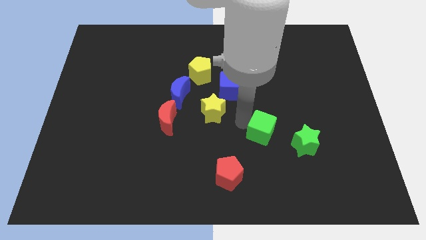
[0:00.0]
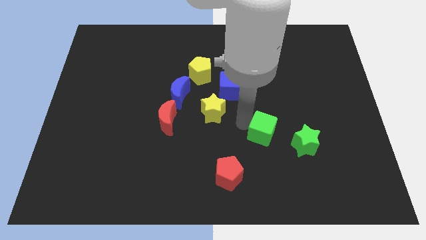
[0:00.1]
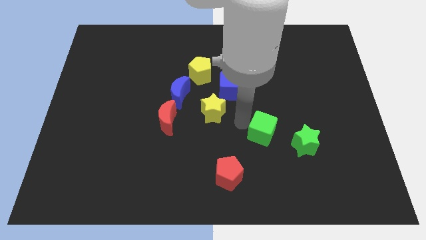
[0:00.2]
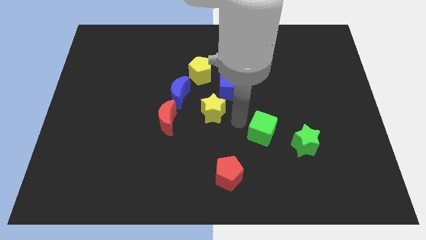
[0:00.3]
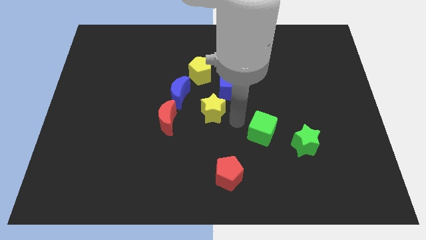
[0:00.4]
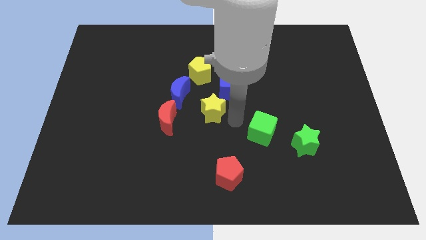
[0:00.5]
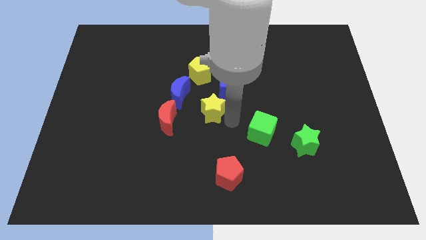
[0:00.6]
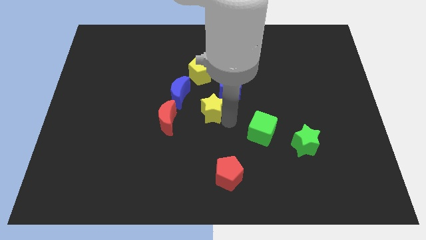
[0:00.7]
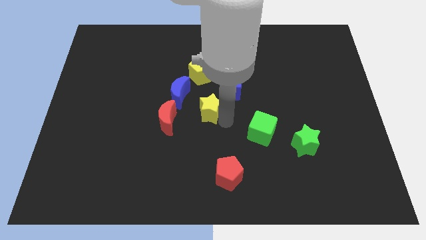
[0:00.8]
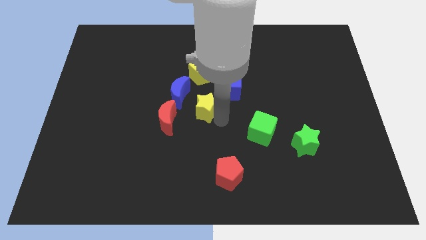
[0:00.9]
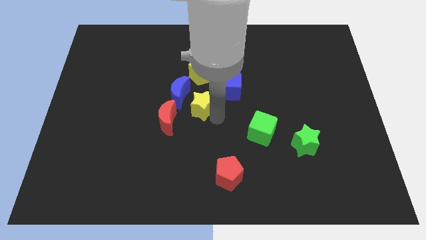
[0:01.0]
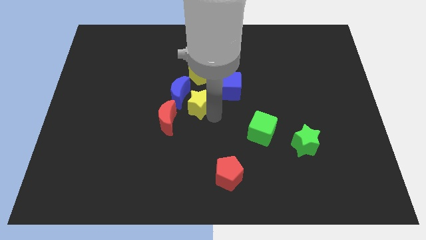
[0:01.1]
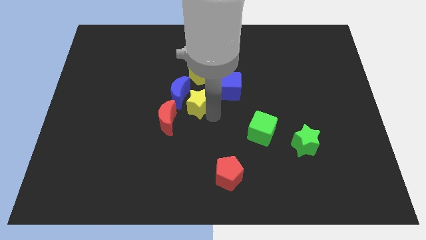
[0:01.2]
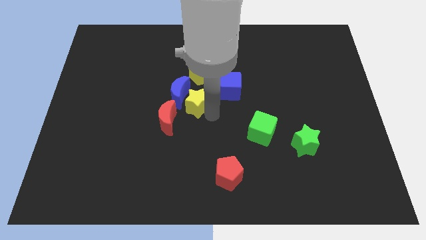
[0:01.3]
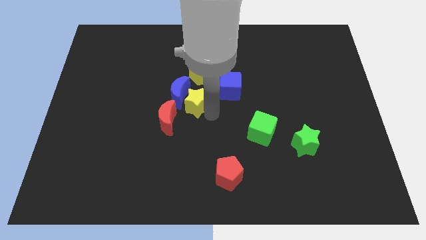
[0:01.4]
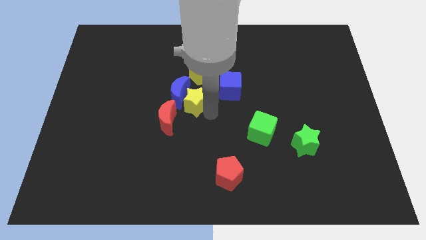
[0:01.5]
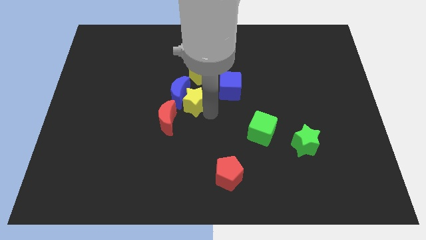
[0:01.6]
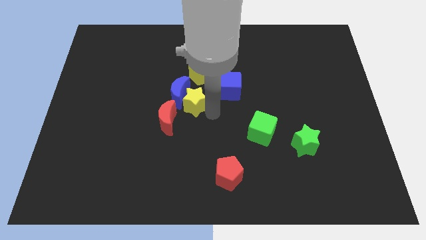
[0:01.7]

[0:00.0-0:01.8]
push yellow star into the blue crescent

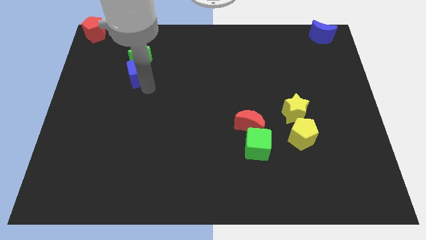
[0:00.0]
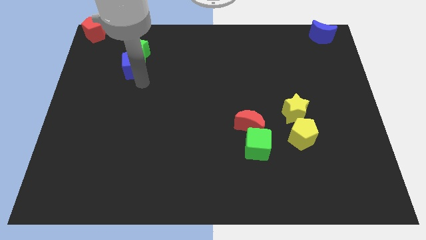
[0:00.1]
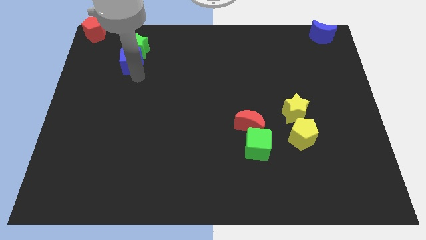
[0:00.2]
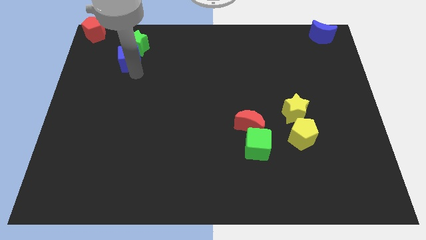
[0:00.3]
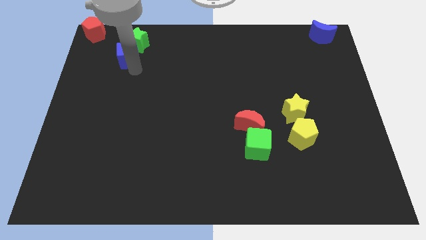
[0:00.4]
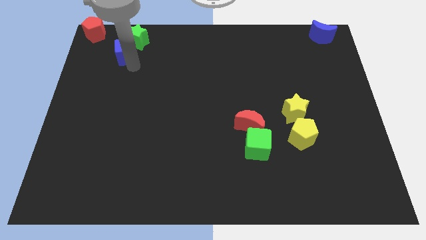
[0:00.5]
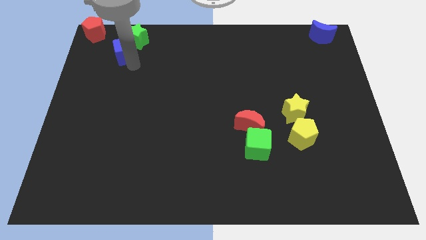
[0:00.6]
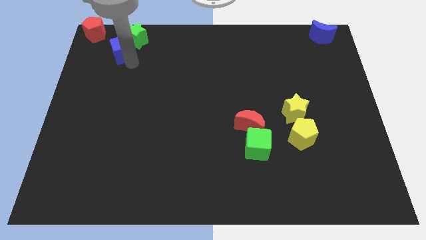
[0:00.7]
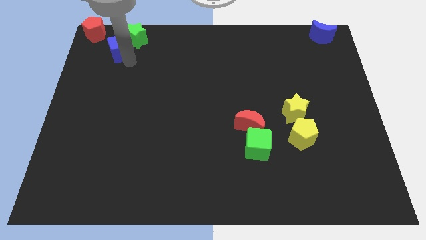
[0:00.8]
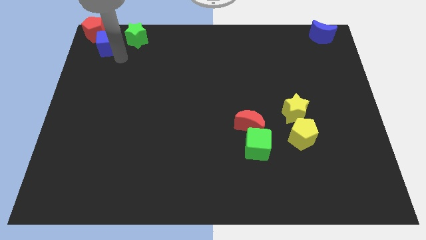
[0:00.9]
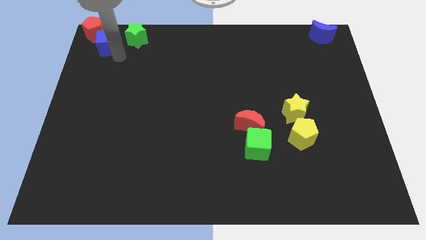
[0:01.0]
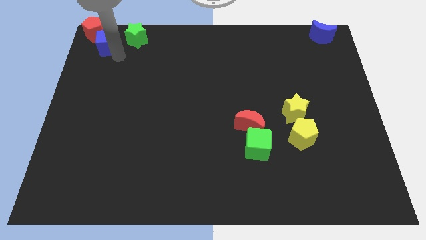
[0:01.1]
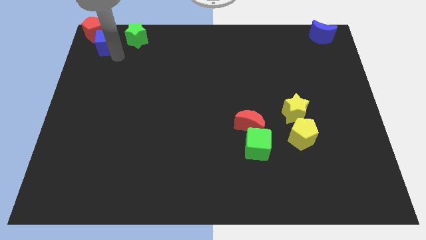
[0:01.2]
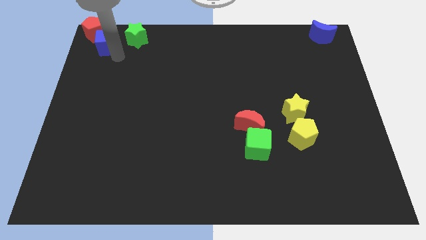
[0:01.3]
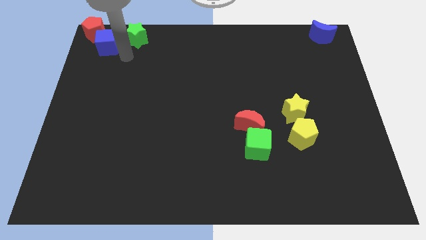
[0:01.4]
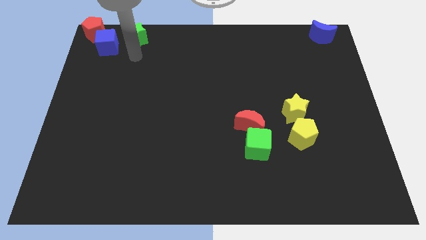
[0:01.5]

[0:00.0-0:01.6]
move the blue cube towards the red pentagon

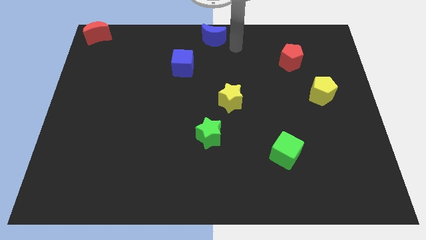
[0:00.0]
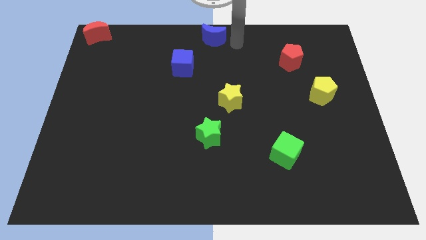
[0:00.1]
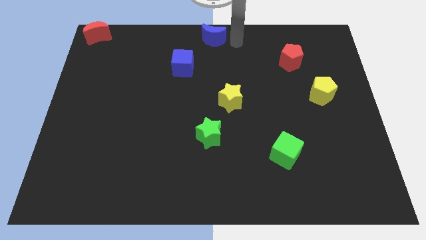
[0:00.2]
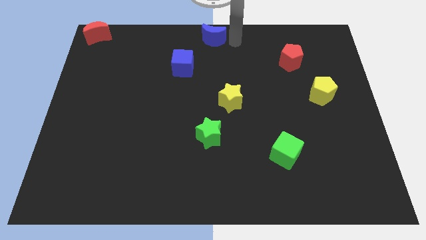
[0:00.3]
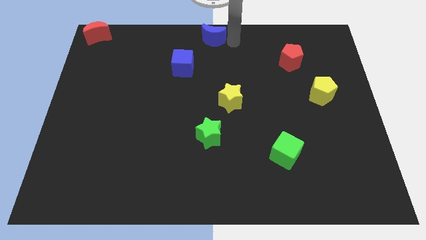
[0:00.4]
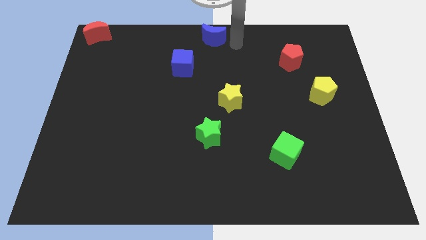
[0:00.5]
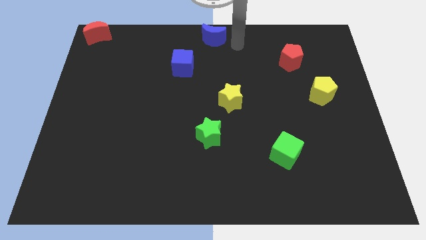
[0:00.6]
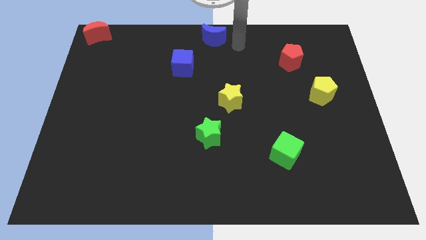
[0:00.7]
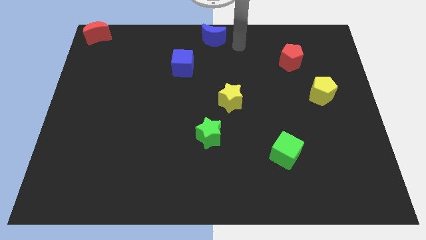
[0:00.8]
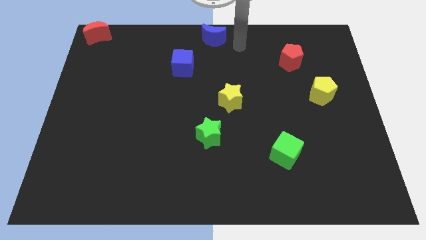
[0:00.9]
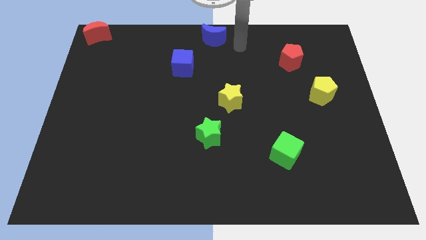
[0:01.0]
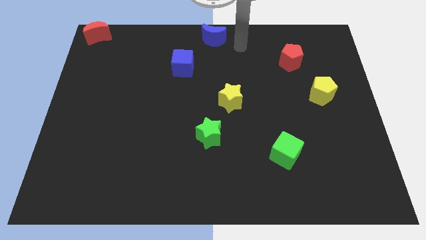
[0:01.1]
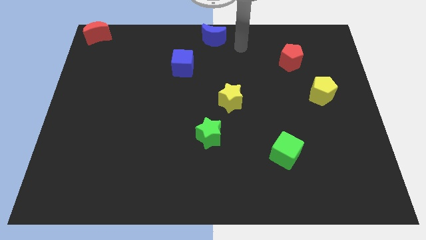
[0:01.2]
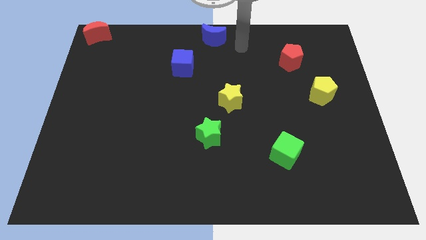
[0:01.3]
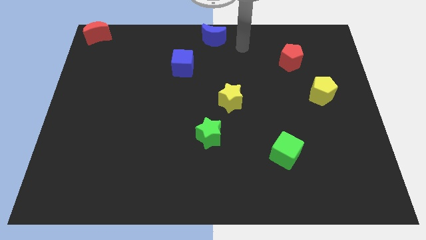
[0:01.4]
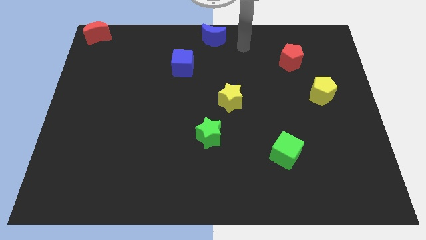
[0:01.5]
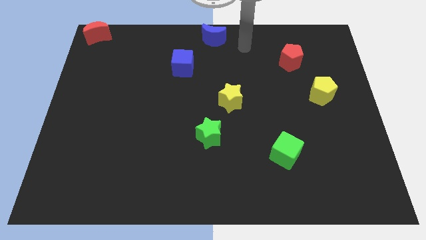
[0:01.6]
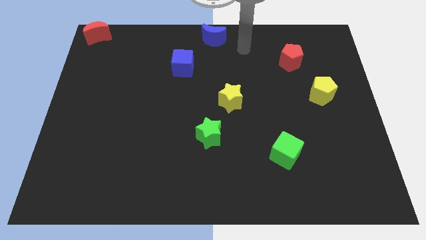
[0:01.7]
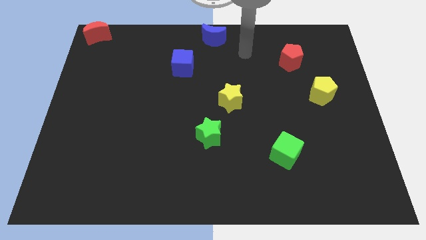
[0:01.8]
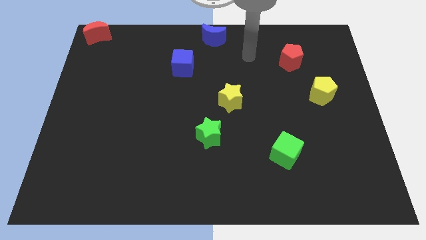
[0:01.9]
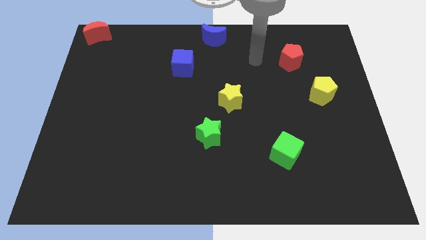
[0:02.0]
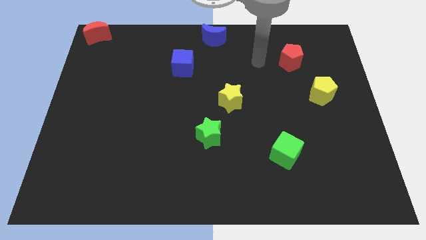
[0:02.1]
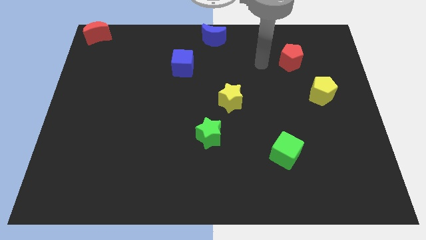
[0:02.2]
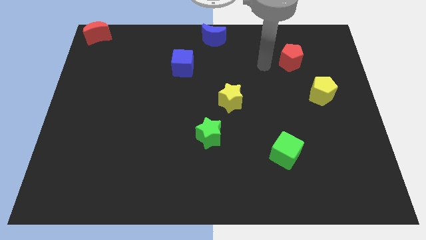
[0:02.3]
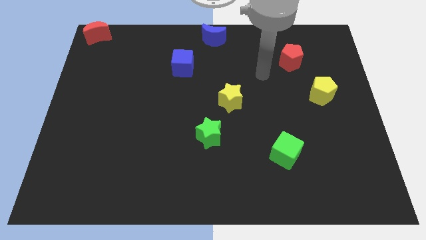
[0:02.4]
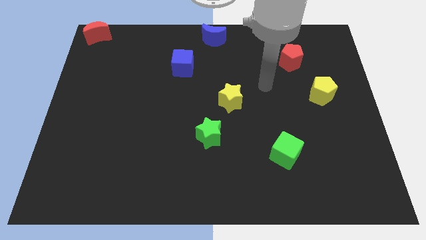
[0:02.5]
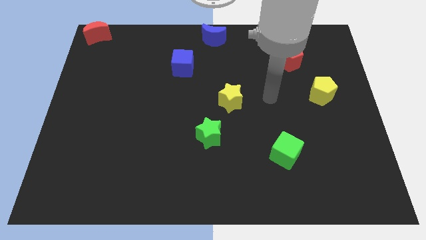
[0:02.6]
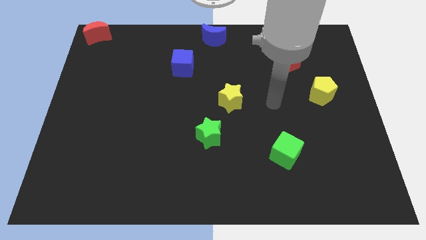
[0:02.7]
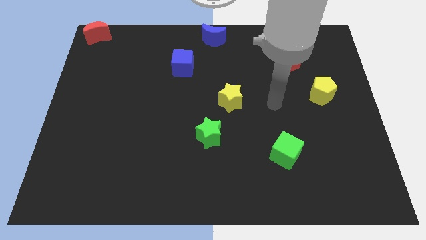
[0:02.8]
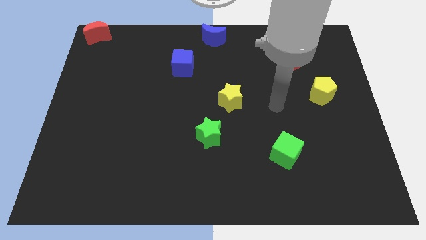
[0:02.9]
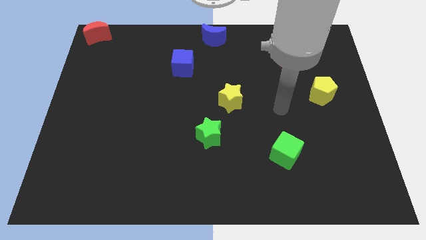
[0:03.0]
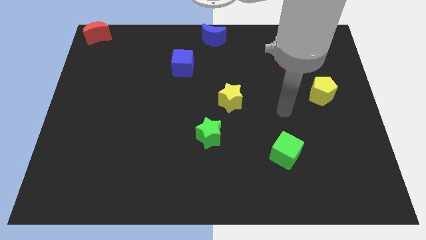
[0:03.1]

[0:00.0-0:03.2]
move ypur arm and point on top of green cube

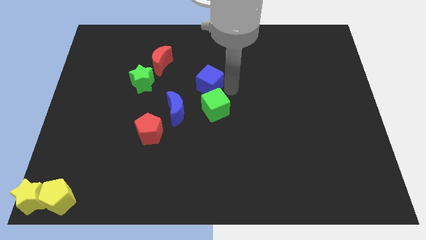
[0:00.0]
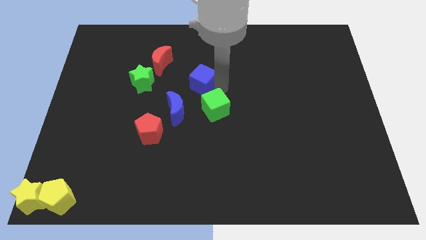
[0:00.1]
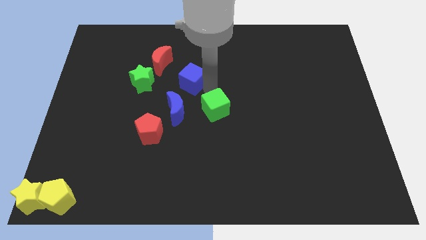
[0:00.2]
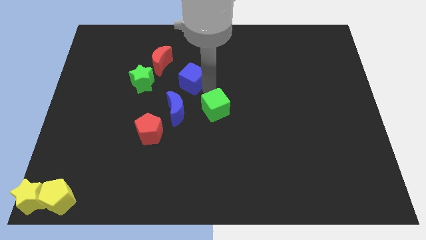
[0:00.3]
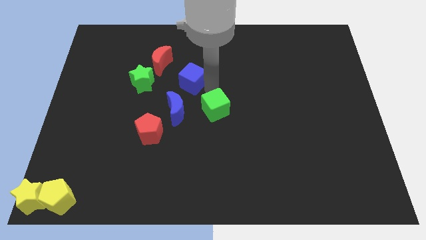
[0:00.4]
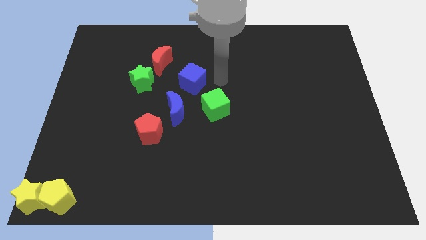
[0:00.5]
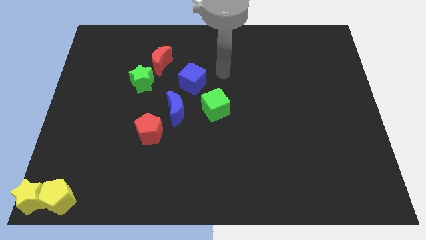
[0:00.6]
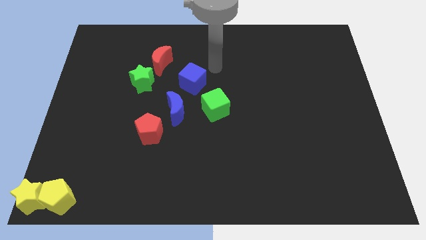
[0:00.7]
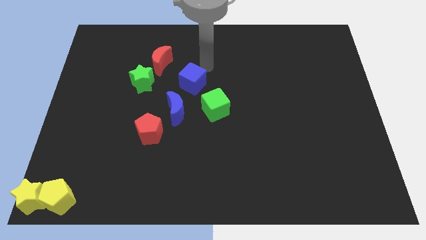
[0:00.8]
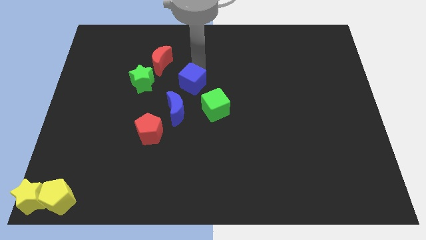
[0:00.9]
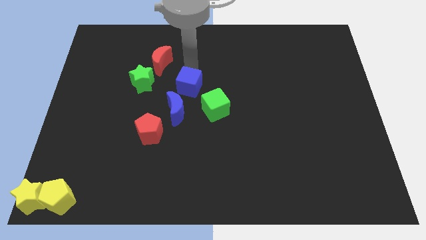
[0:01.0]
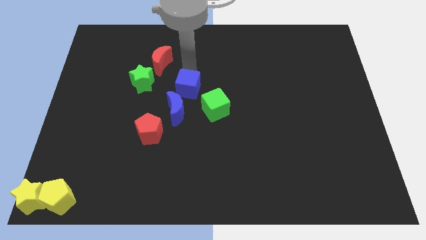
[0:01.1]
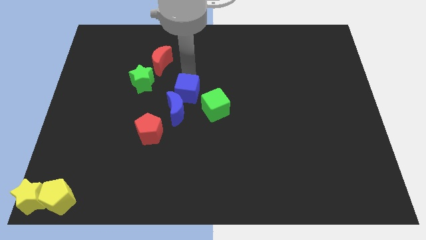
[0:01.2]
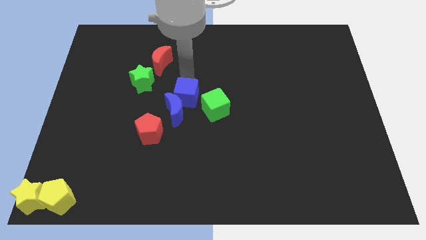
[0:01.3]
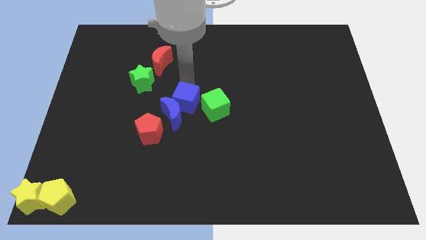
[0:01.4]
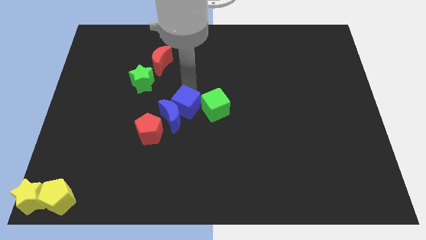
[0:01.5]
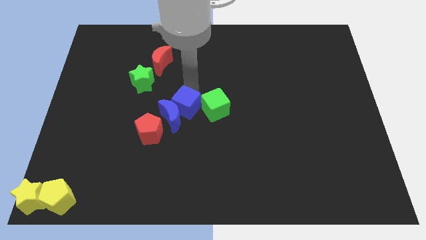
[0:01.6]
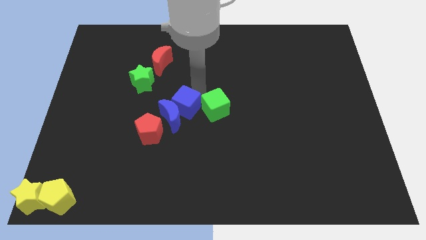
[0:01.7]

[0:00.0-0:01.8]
slide the blue cube into the blue moon

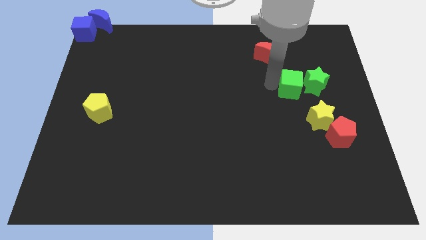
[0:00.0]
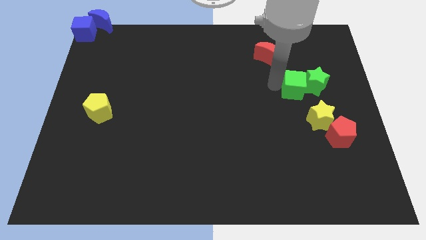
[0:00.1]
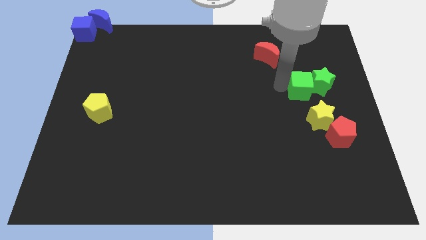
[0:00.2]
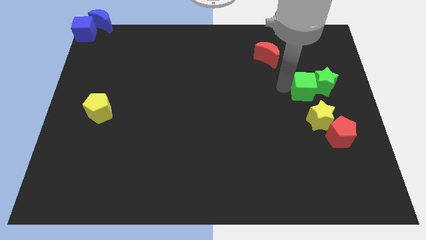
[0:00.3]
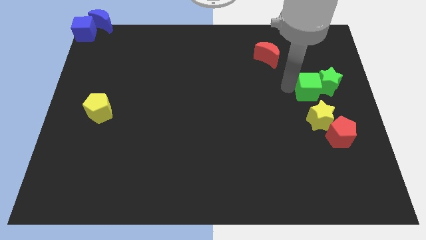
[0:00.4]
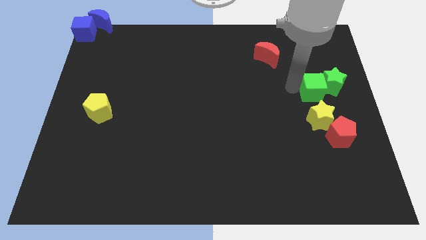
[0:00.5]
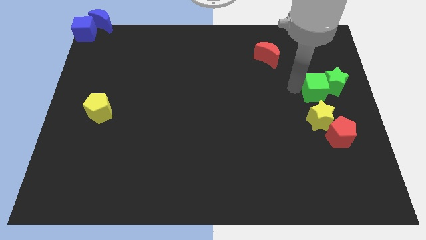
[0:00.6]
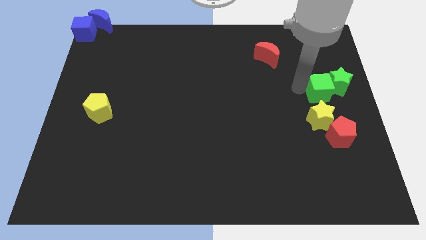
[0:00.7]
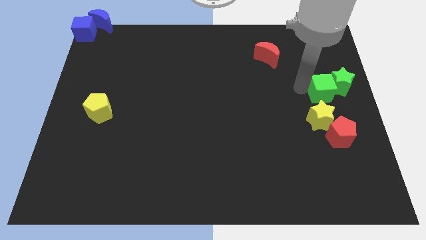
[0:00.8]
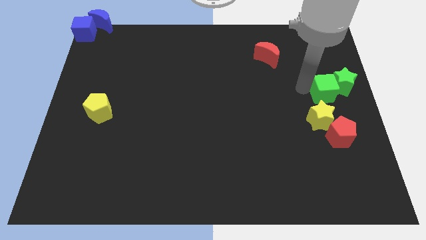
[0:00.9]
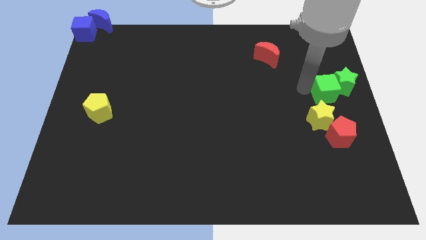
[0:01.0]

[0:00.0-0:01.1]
push the green star with the green cube towards the right center of the board
